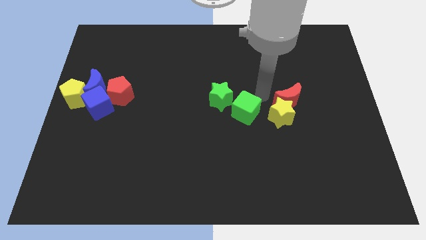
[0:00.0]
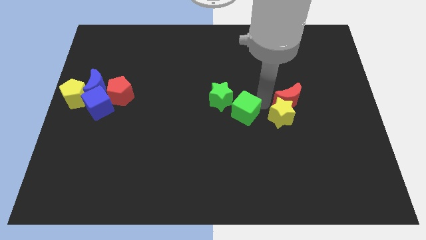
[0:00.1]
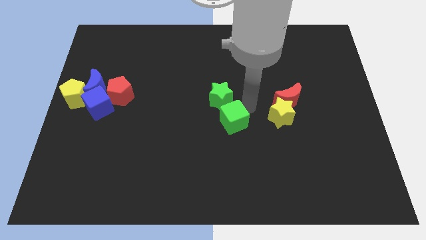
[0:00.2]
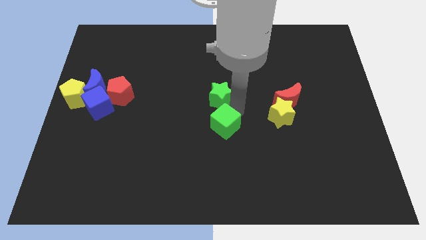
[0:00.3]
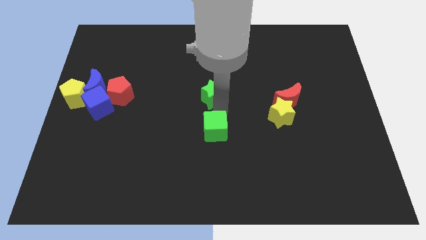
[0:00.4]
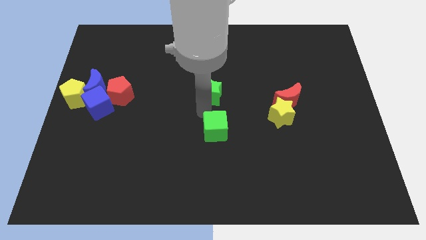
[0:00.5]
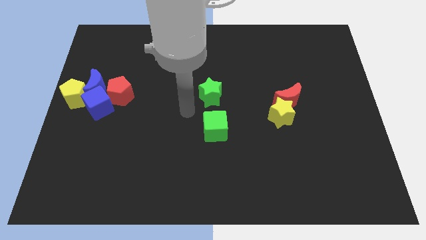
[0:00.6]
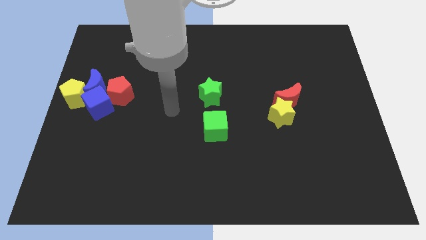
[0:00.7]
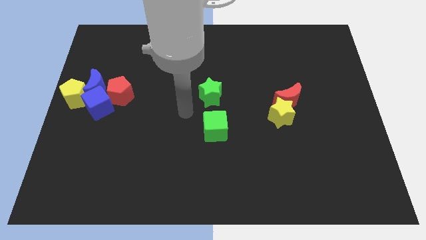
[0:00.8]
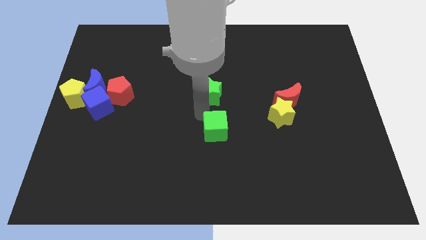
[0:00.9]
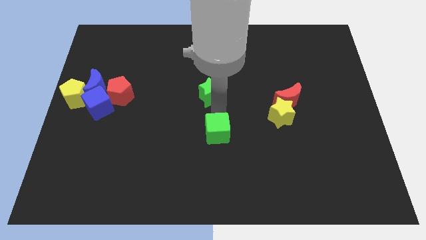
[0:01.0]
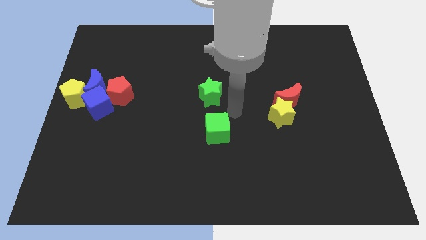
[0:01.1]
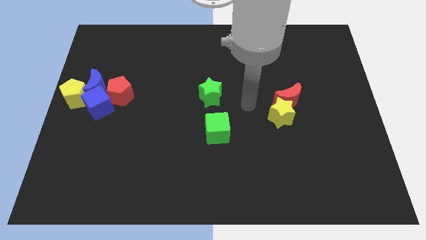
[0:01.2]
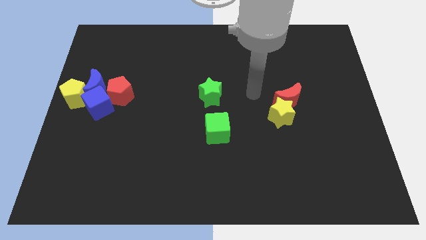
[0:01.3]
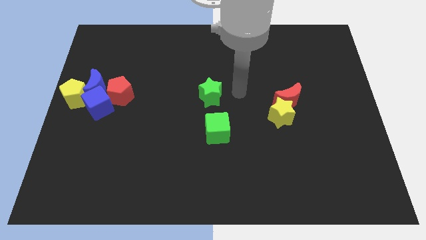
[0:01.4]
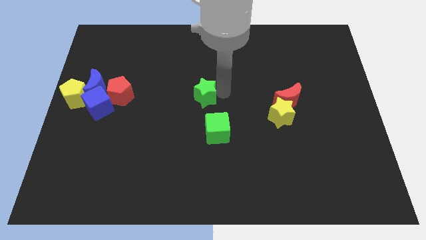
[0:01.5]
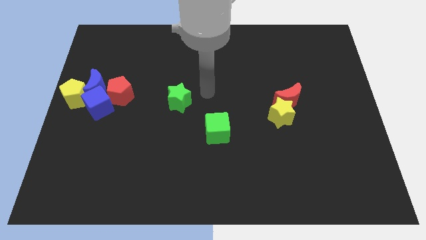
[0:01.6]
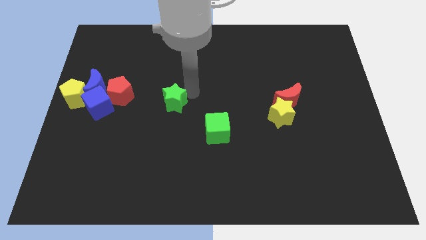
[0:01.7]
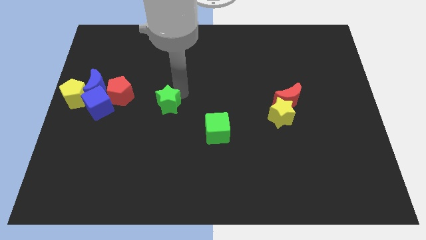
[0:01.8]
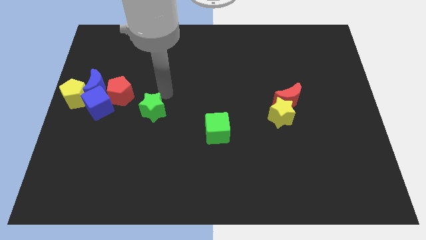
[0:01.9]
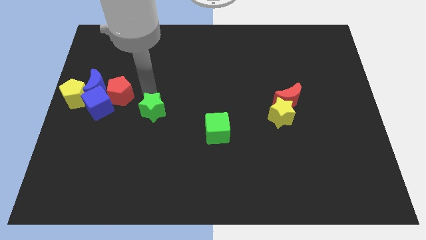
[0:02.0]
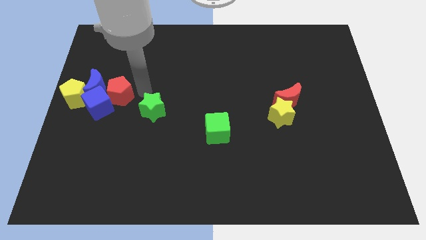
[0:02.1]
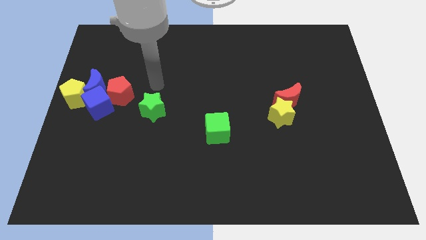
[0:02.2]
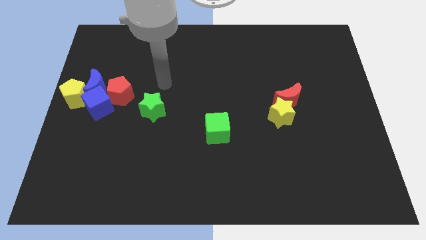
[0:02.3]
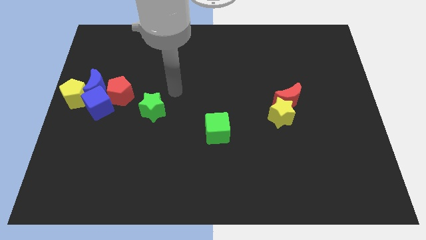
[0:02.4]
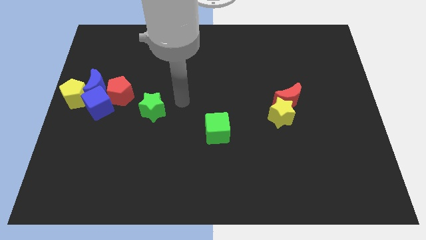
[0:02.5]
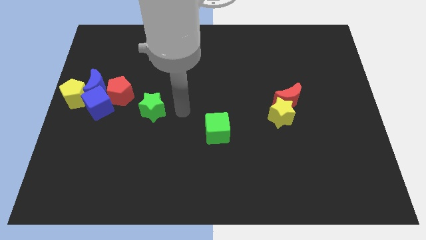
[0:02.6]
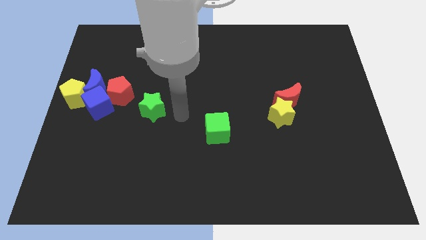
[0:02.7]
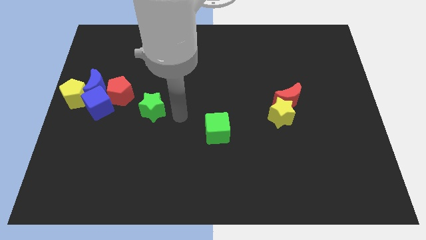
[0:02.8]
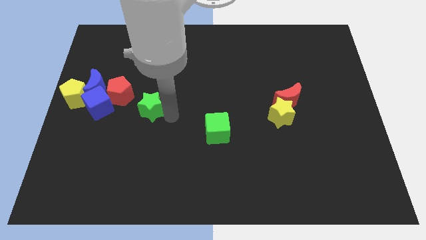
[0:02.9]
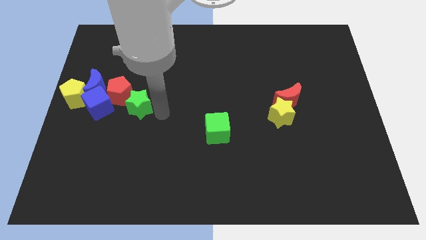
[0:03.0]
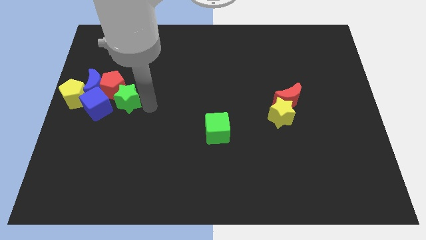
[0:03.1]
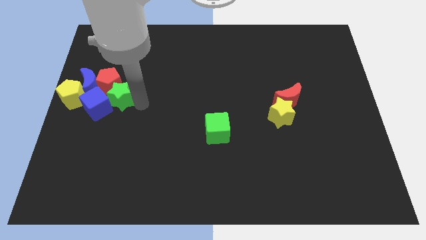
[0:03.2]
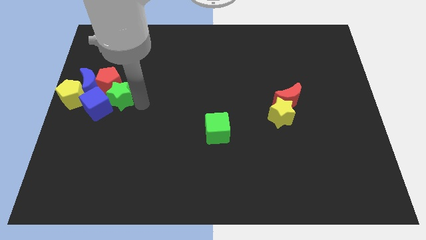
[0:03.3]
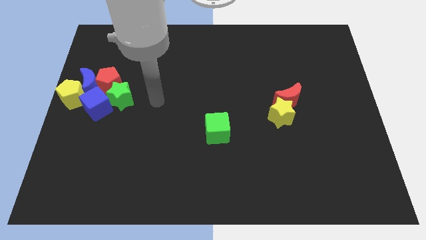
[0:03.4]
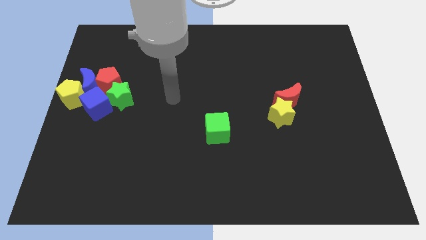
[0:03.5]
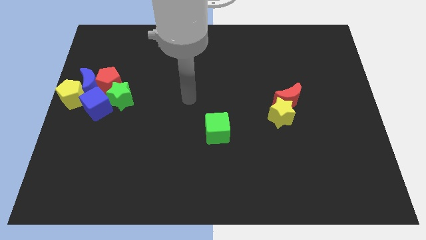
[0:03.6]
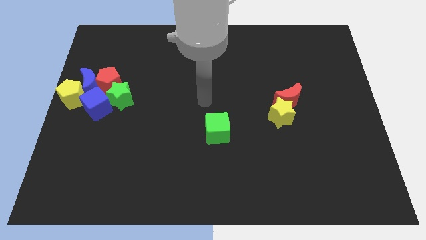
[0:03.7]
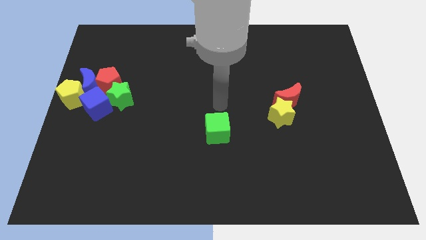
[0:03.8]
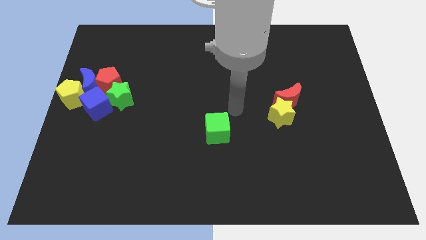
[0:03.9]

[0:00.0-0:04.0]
place the green star on the bottom right side of the red pentagon

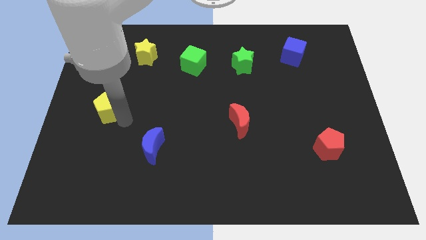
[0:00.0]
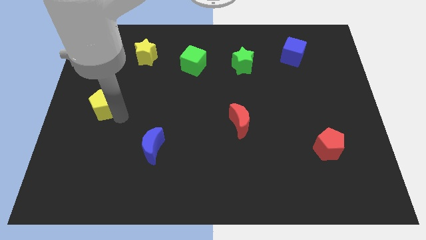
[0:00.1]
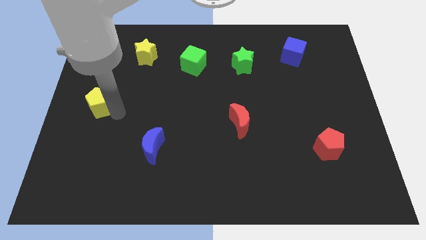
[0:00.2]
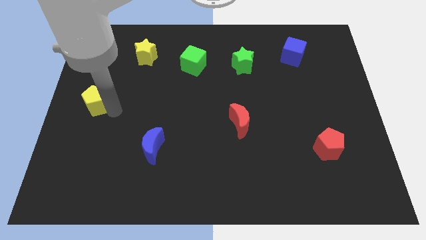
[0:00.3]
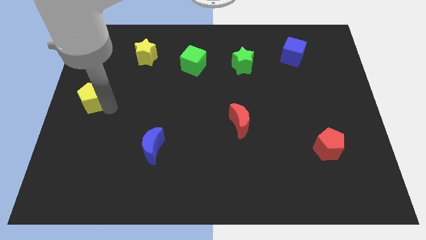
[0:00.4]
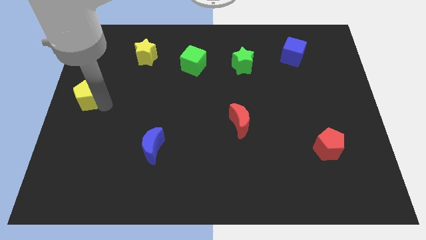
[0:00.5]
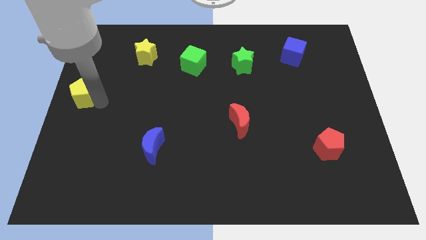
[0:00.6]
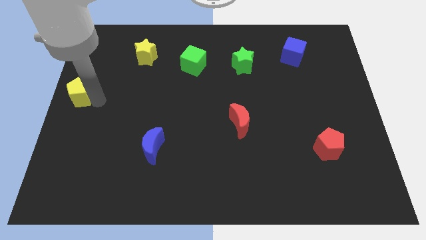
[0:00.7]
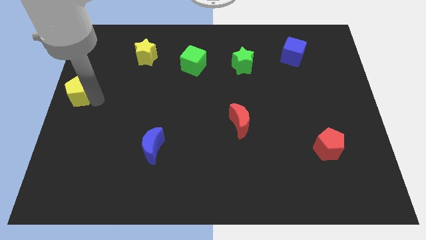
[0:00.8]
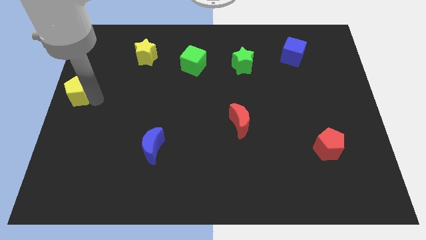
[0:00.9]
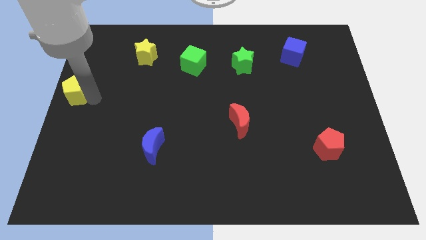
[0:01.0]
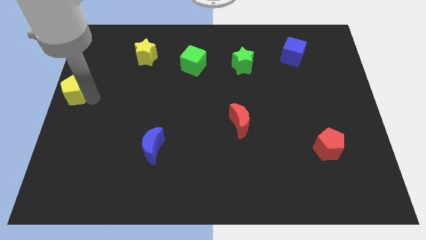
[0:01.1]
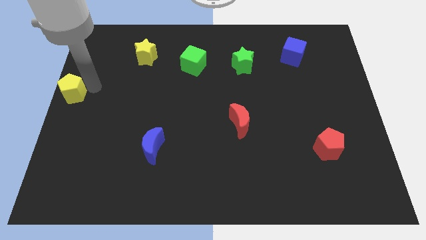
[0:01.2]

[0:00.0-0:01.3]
slide the yellow pentagon to the left side of the table

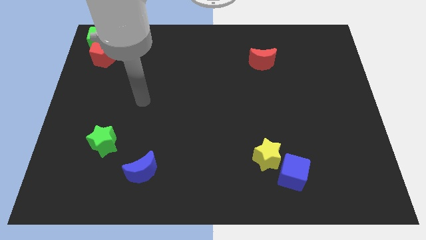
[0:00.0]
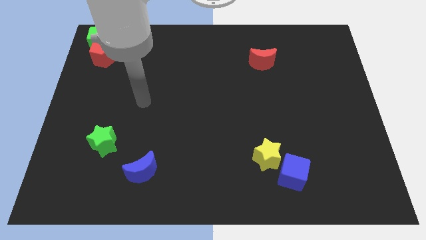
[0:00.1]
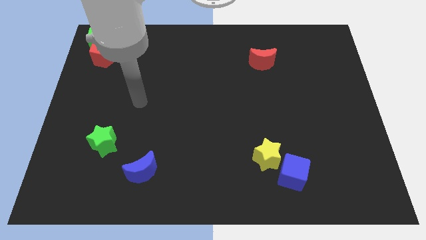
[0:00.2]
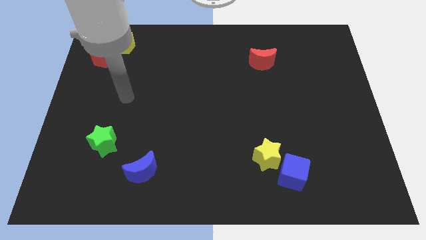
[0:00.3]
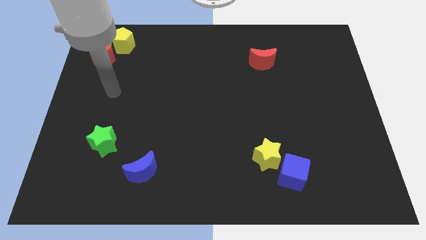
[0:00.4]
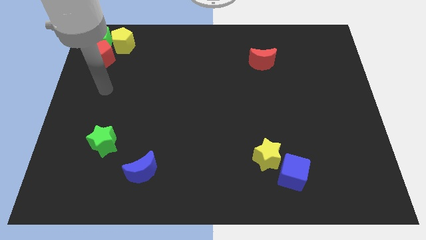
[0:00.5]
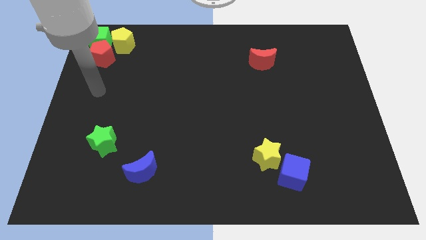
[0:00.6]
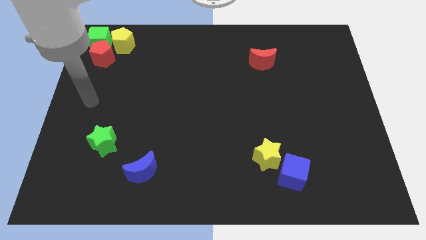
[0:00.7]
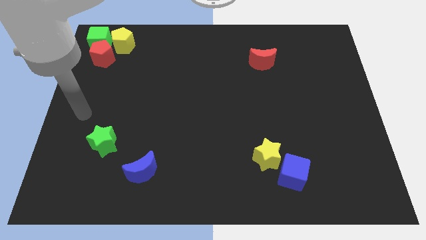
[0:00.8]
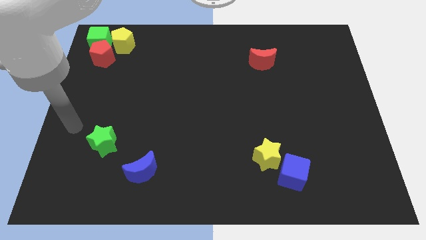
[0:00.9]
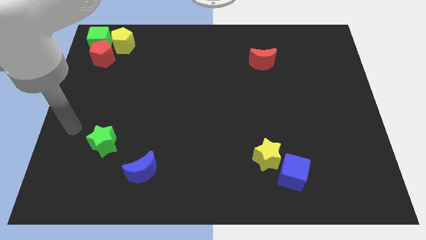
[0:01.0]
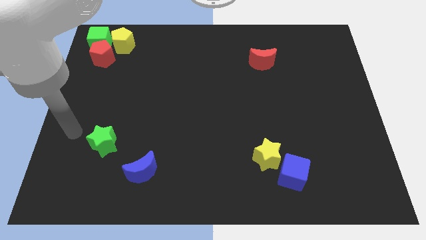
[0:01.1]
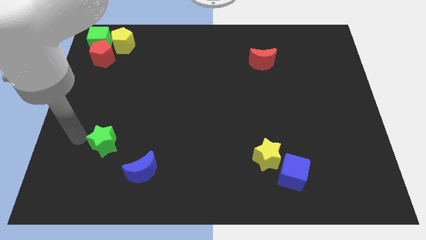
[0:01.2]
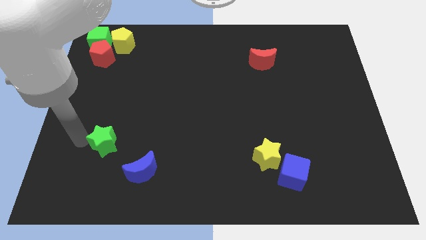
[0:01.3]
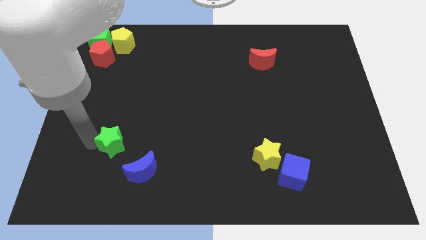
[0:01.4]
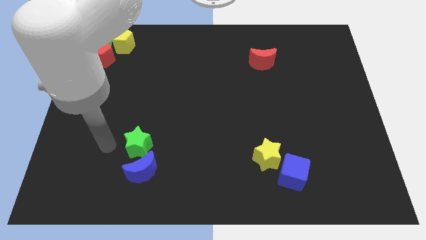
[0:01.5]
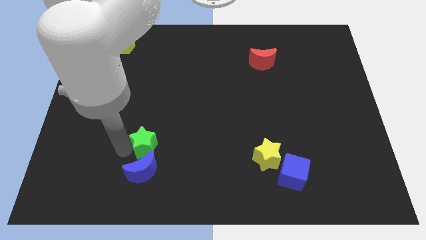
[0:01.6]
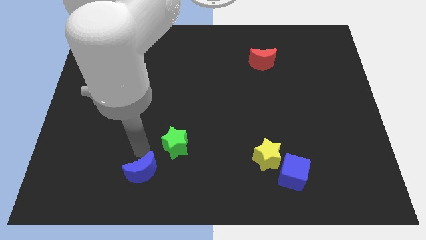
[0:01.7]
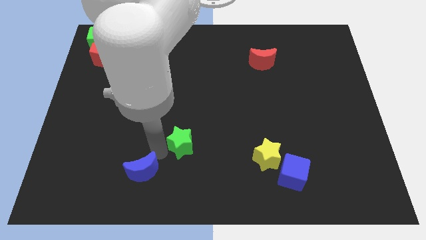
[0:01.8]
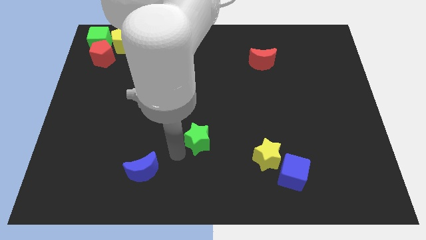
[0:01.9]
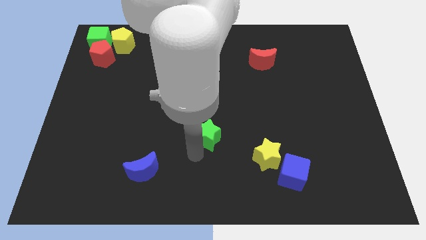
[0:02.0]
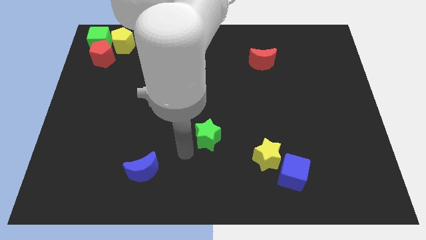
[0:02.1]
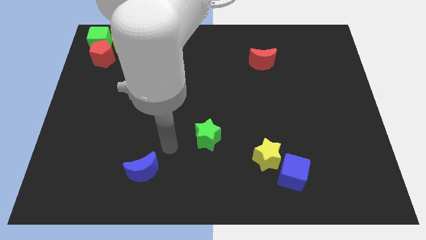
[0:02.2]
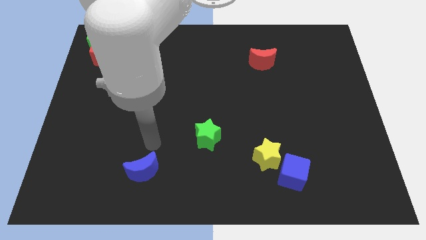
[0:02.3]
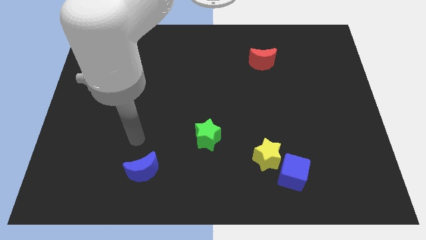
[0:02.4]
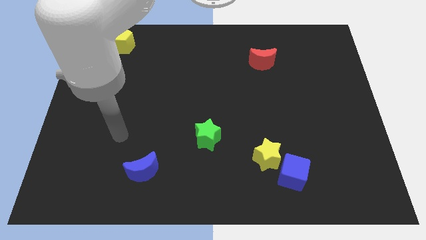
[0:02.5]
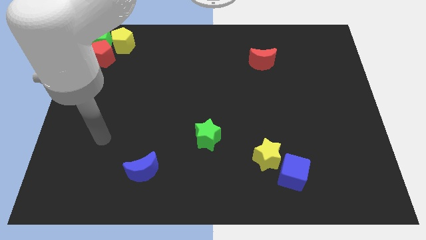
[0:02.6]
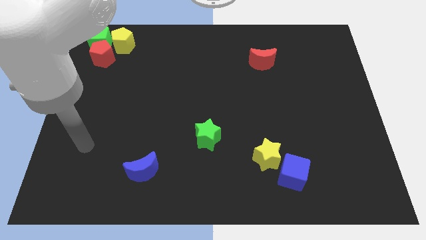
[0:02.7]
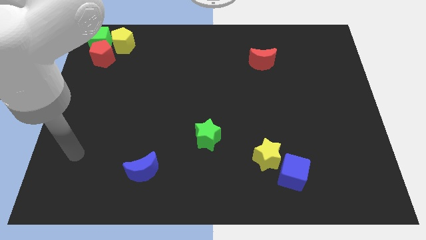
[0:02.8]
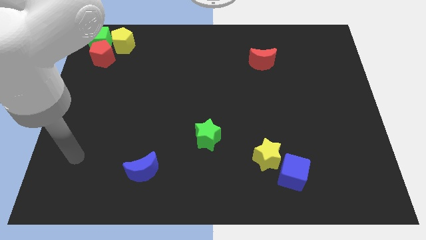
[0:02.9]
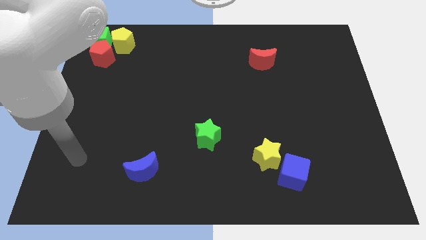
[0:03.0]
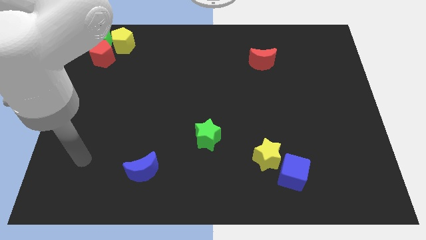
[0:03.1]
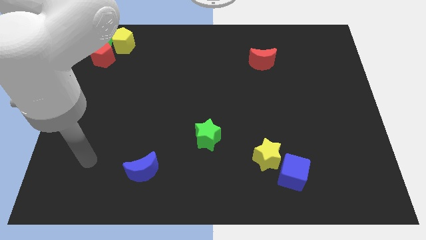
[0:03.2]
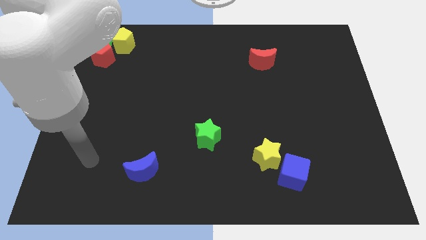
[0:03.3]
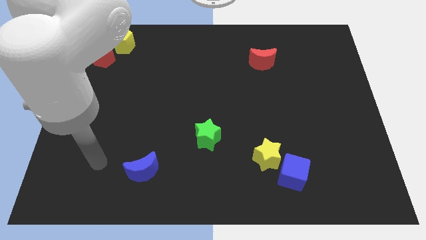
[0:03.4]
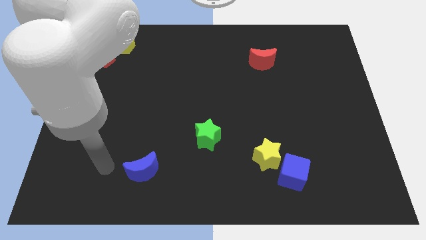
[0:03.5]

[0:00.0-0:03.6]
move the green star towards the center of the board
